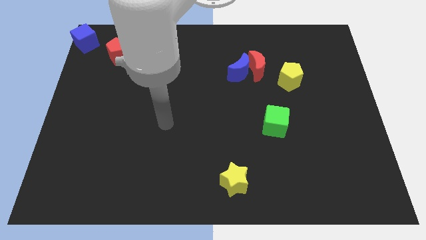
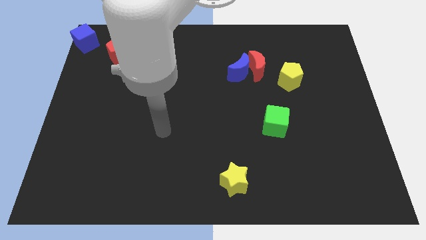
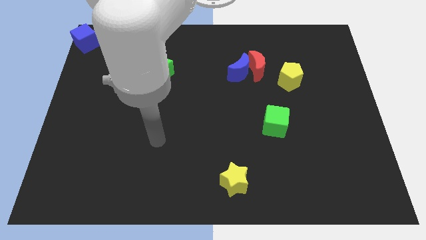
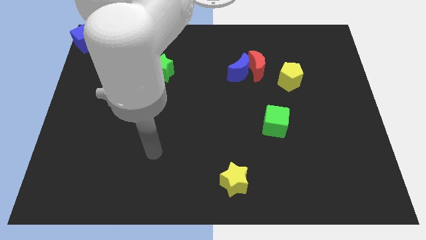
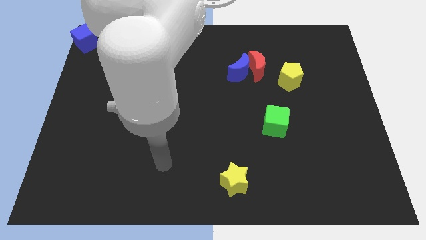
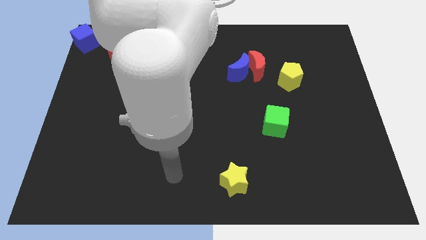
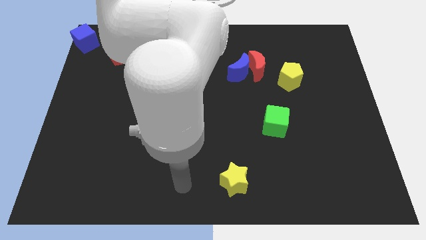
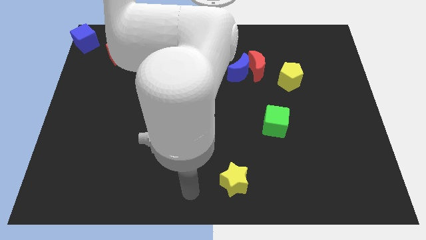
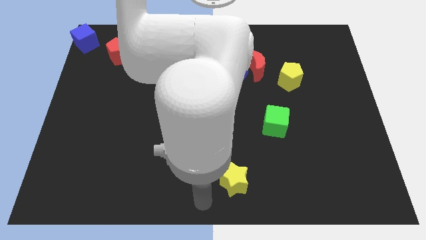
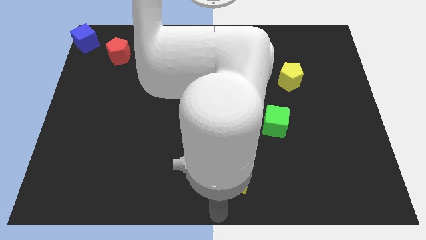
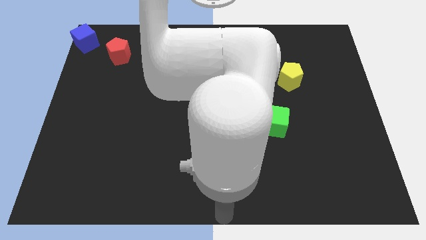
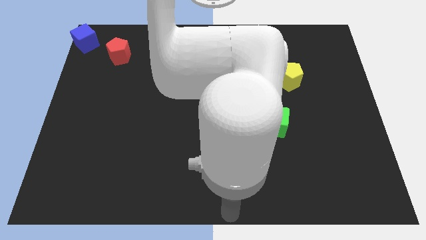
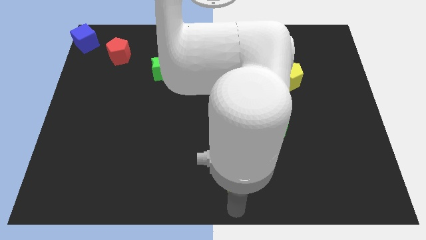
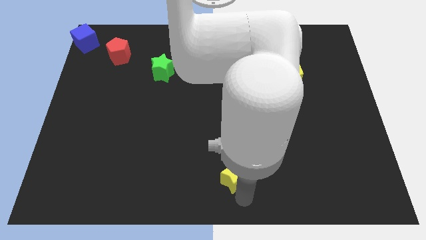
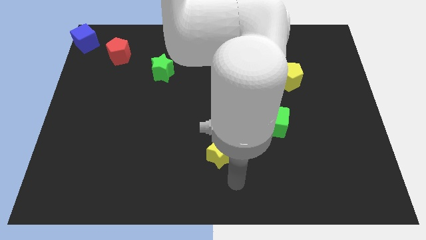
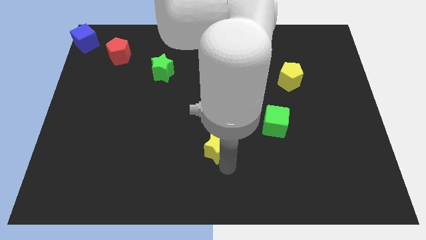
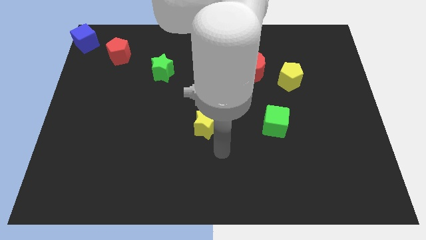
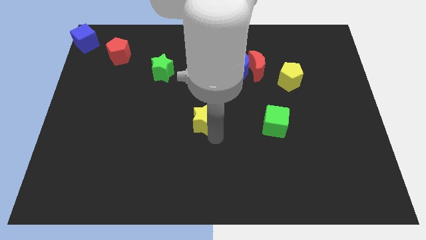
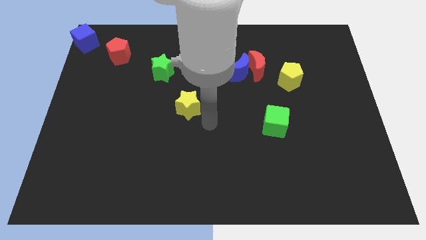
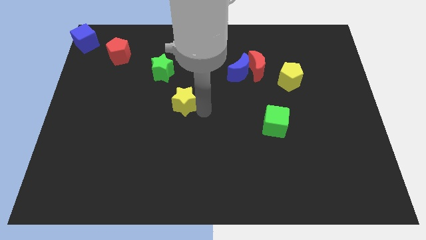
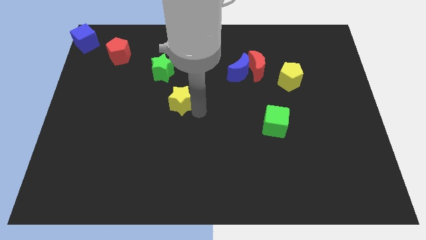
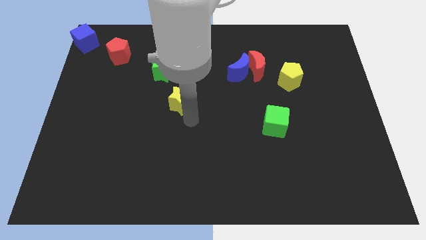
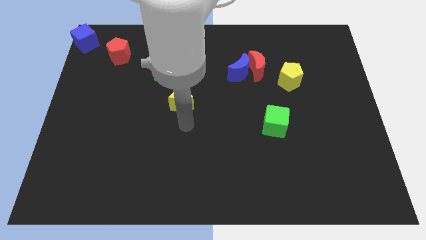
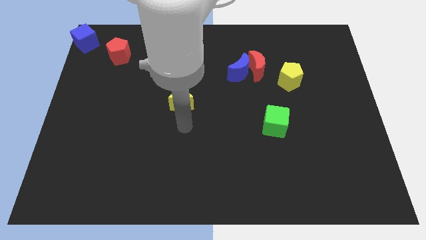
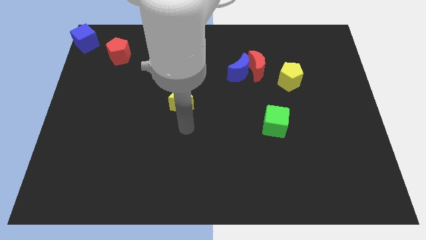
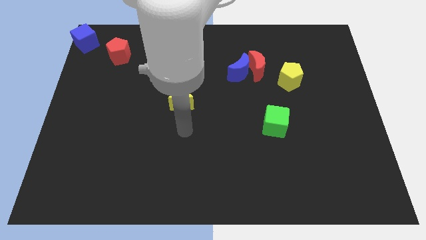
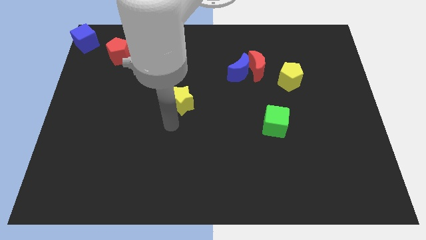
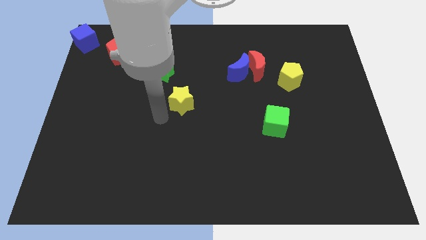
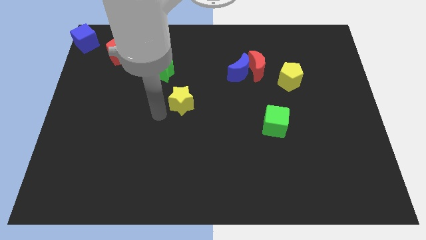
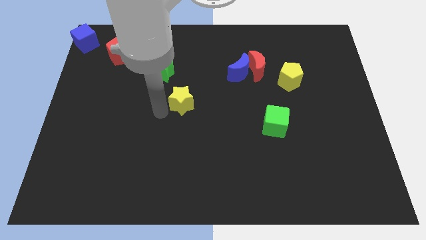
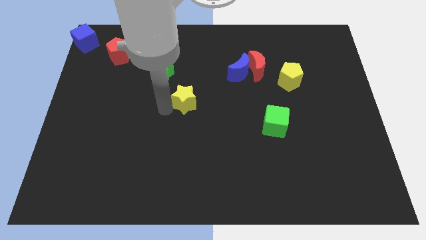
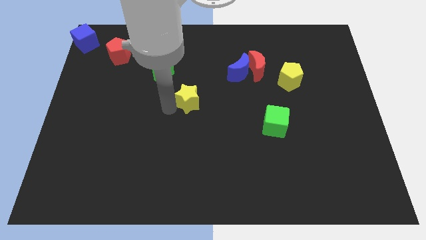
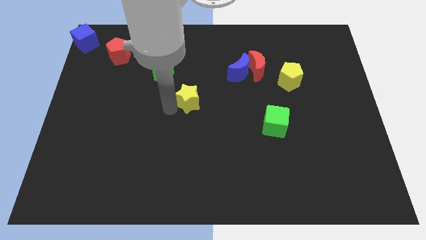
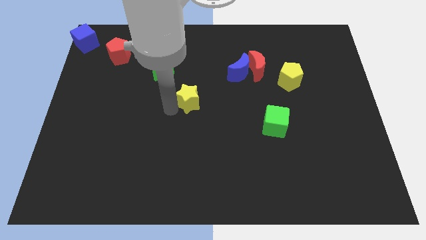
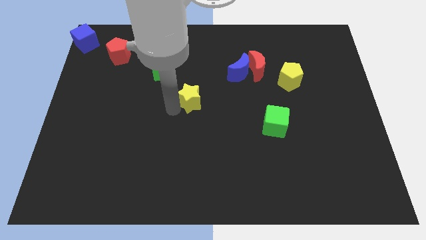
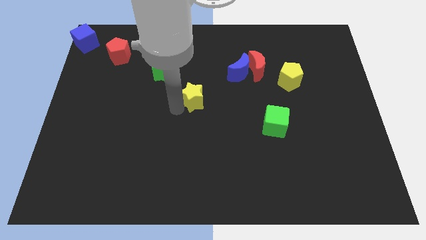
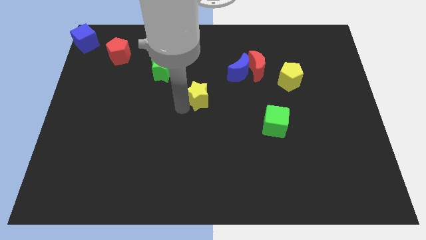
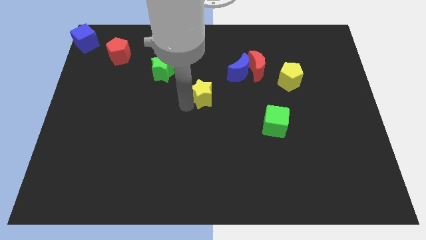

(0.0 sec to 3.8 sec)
move the yellow star to the center of the board

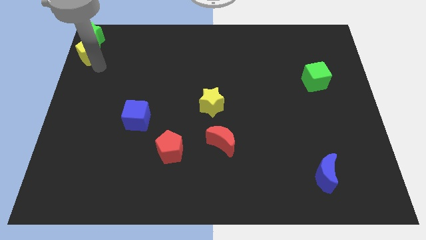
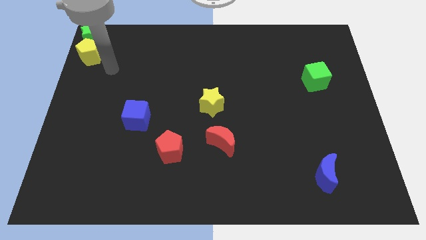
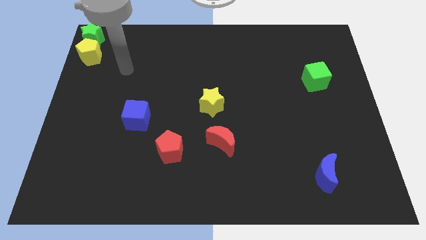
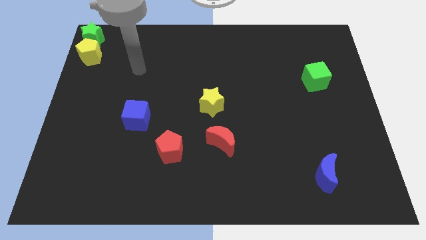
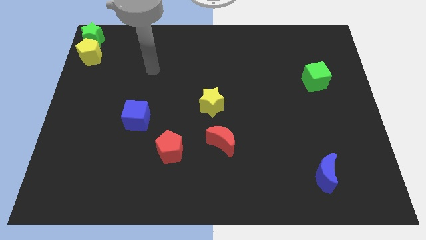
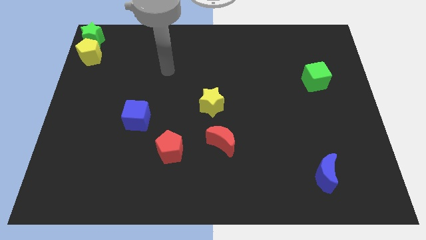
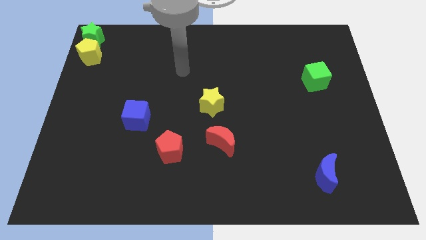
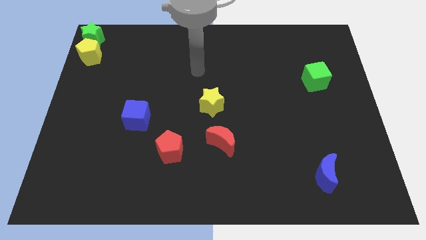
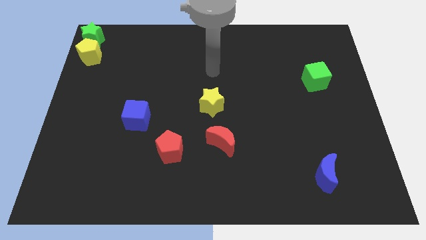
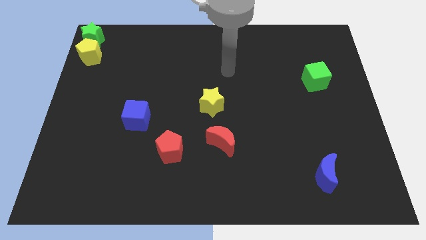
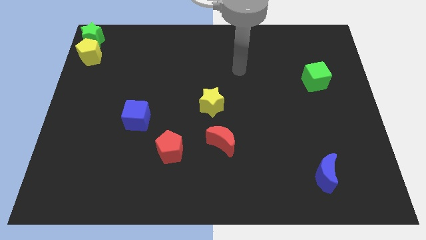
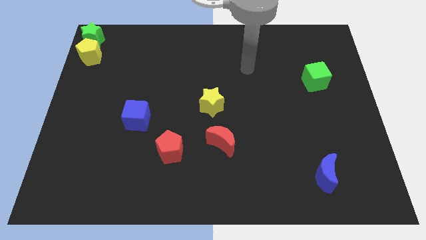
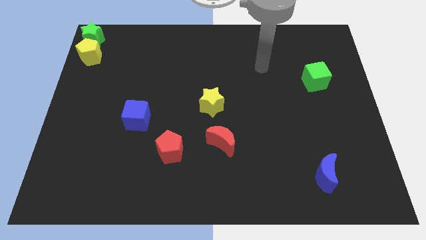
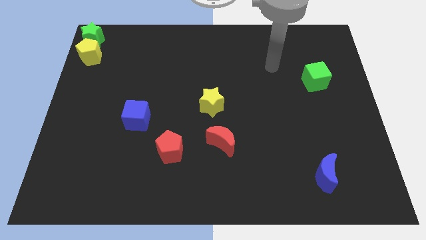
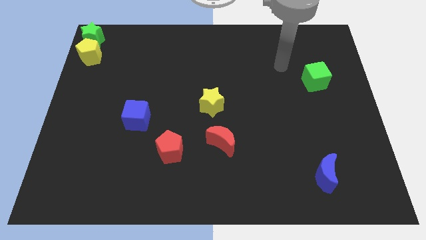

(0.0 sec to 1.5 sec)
move arm towards green cube

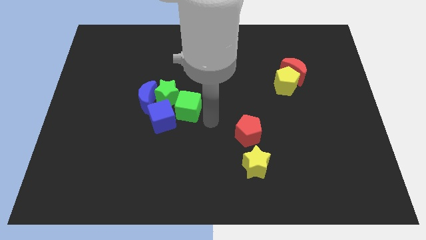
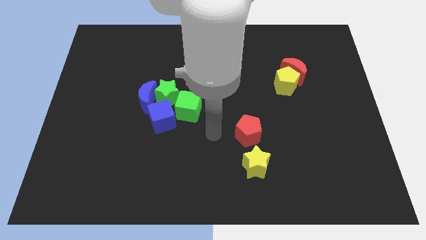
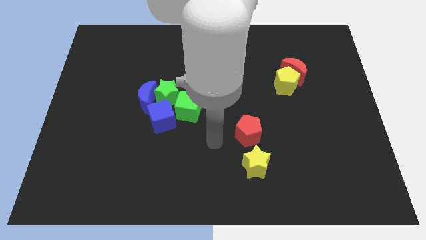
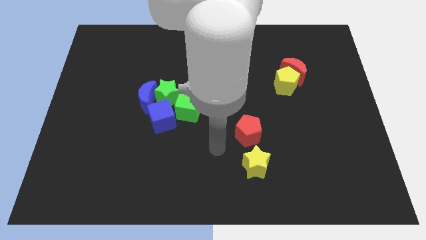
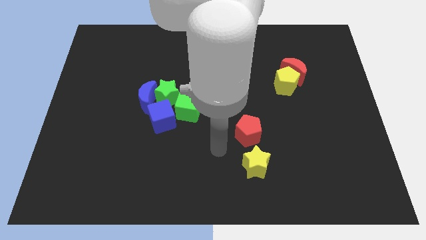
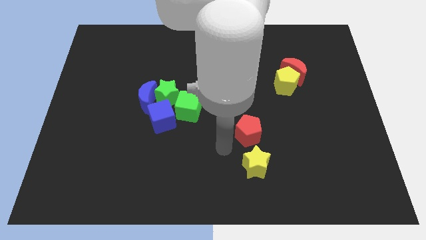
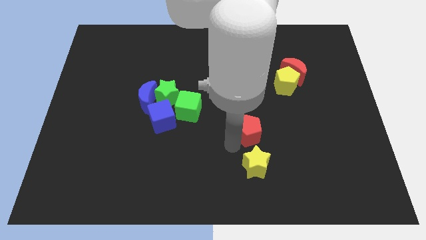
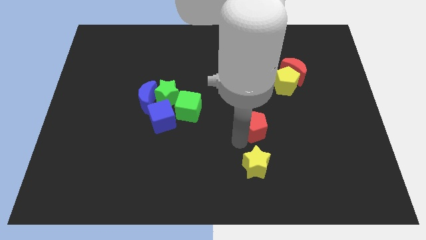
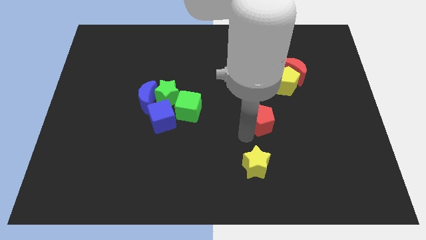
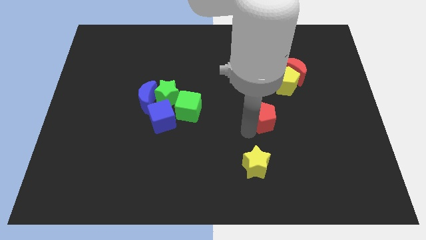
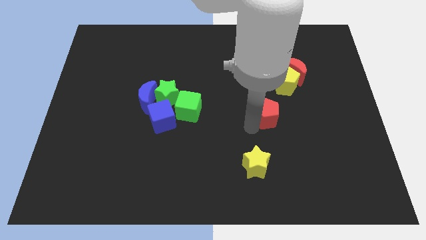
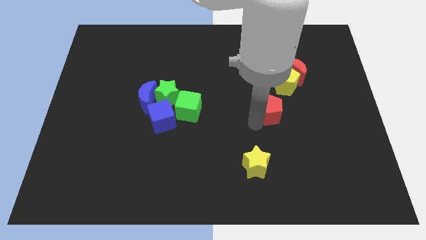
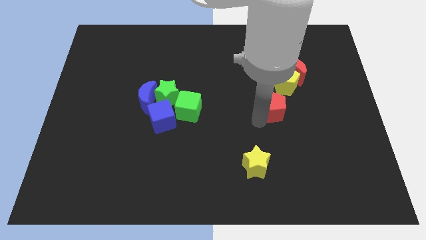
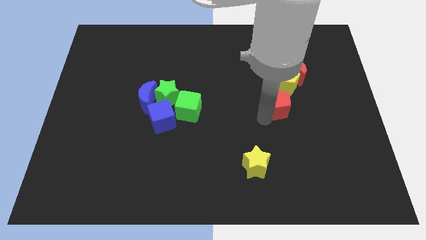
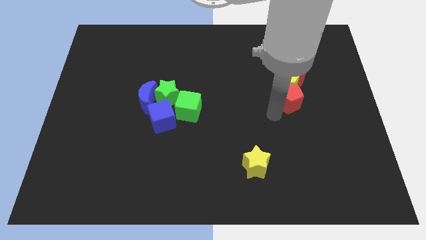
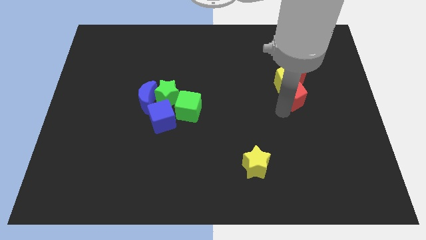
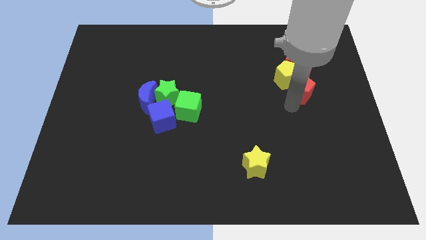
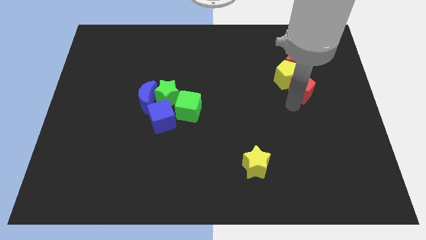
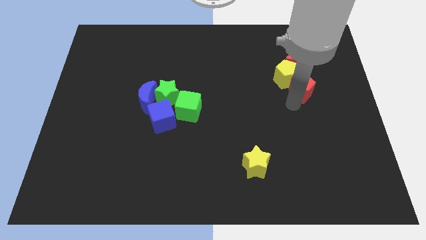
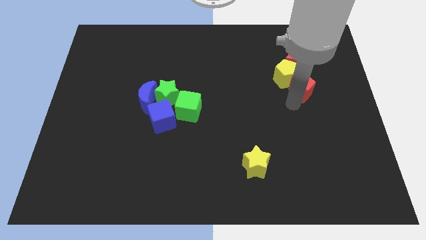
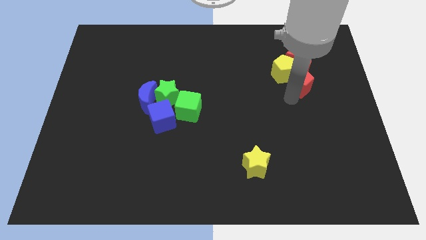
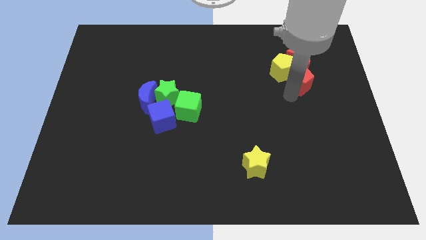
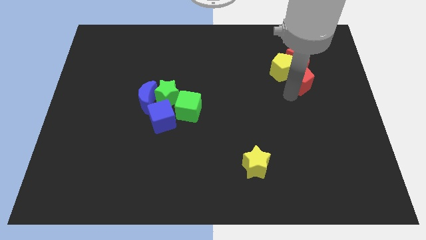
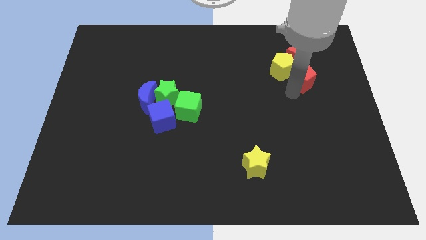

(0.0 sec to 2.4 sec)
push the red pentagon into the yellow pentagon

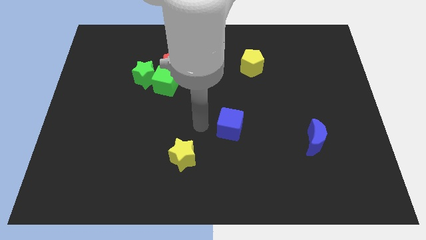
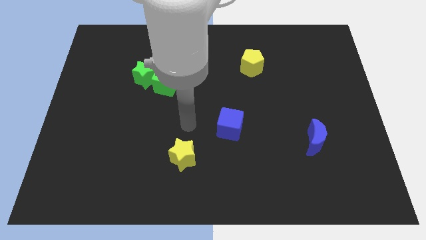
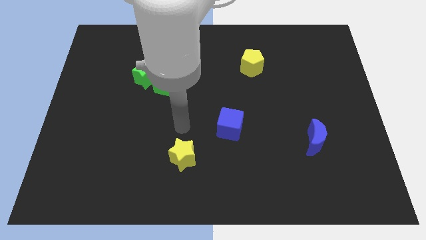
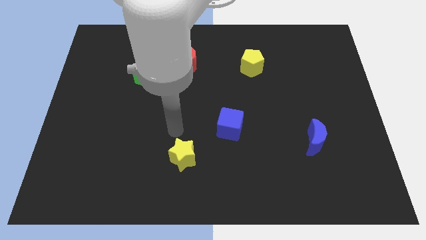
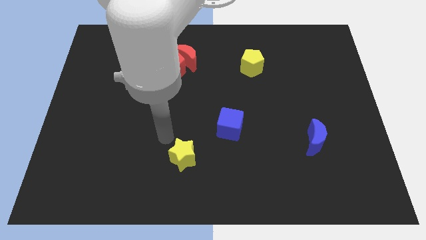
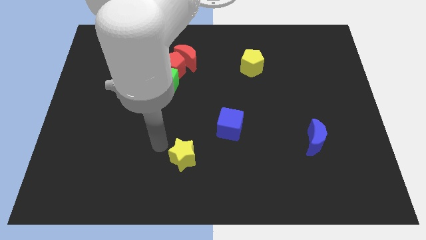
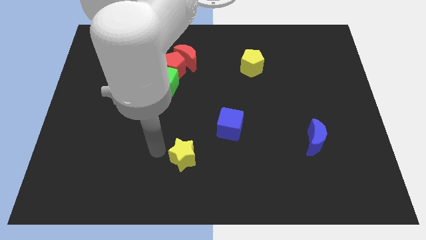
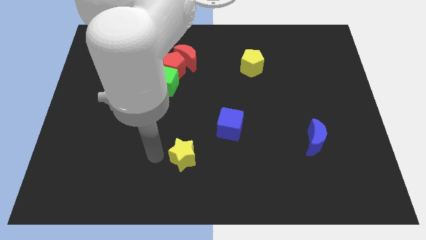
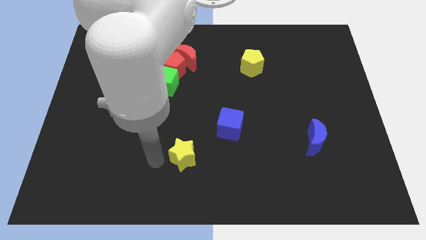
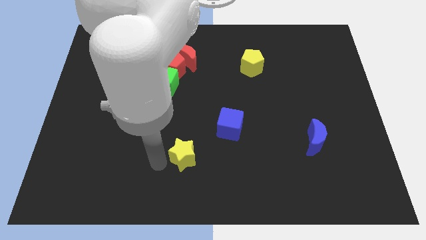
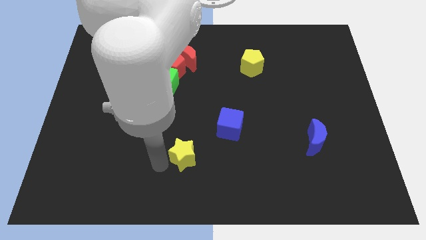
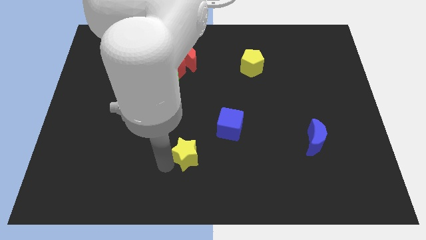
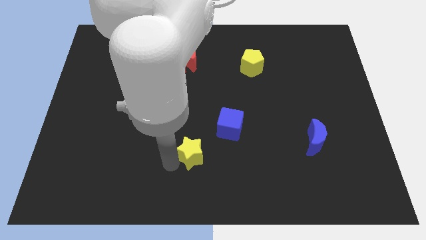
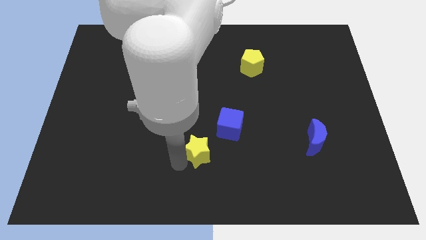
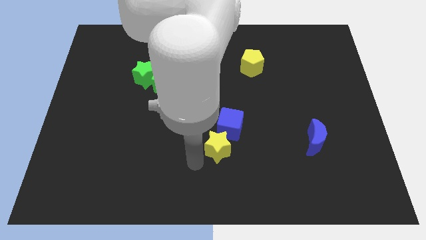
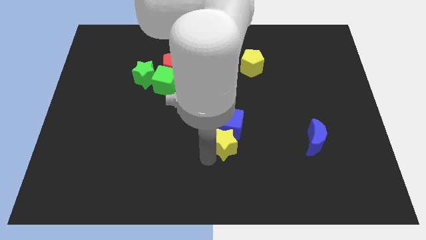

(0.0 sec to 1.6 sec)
push the yellow star into the blue cube
